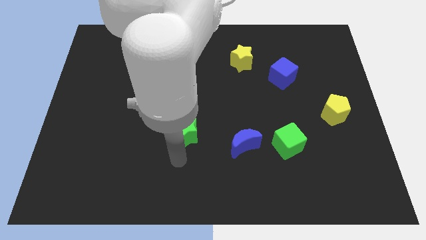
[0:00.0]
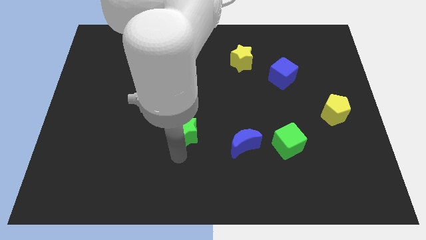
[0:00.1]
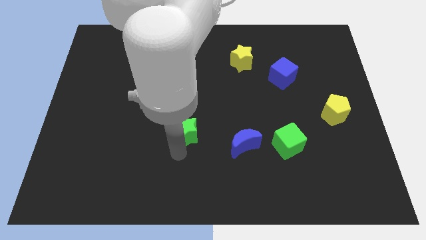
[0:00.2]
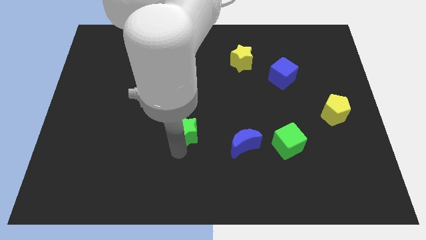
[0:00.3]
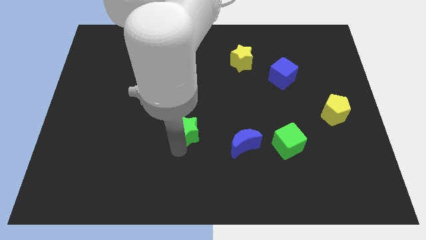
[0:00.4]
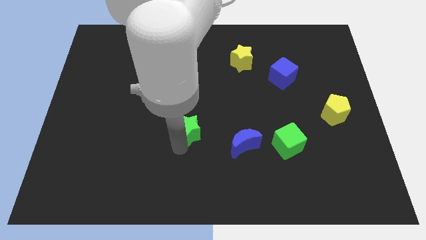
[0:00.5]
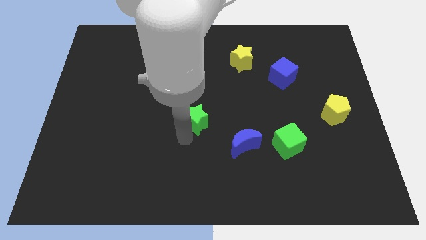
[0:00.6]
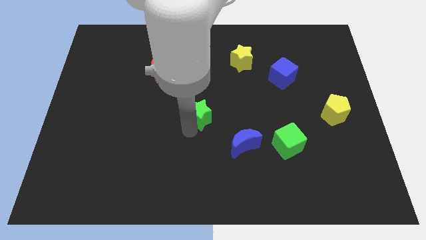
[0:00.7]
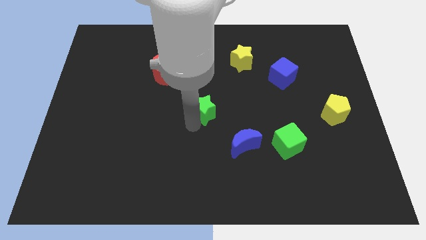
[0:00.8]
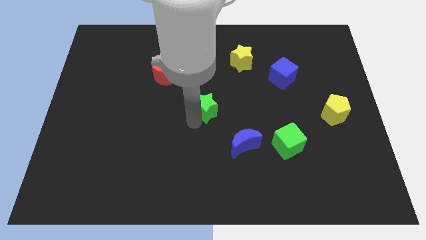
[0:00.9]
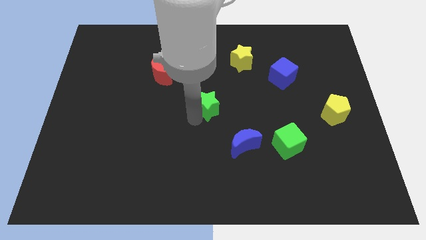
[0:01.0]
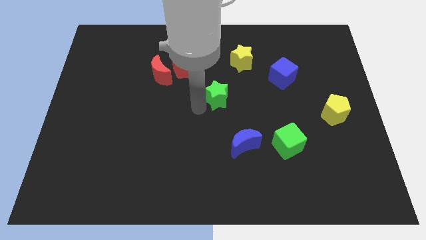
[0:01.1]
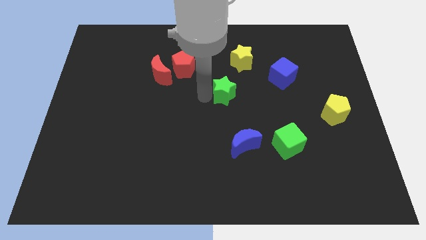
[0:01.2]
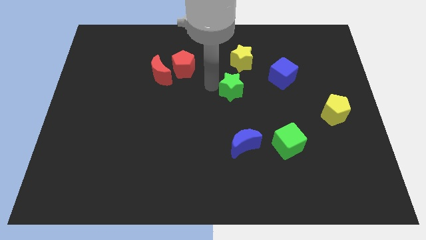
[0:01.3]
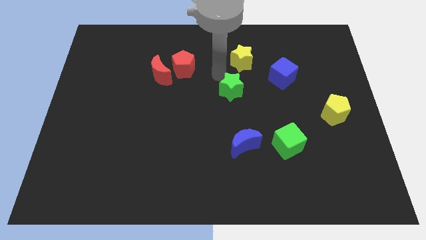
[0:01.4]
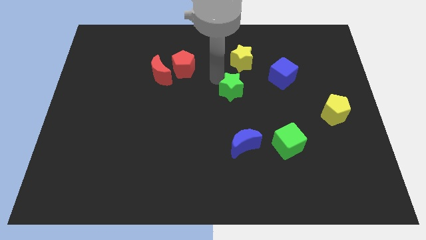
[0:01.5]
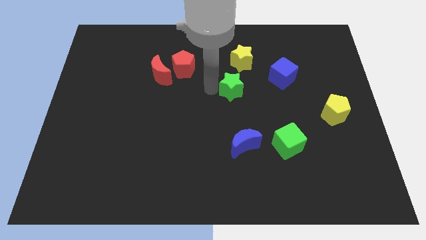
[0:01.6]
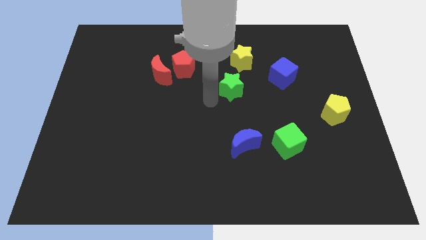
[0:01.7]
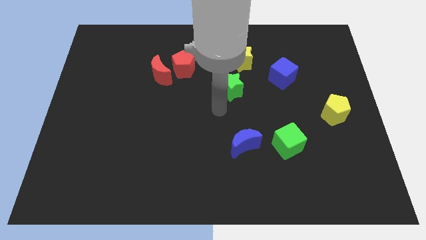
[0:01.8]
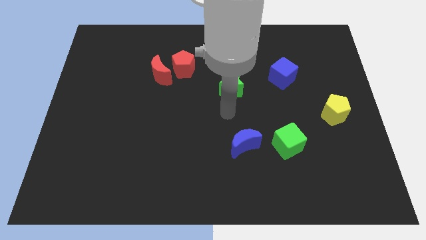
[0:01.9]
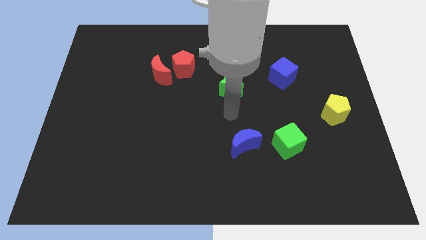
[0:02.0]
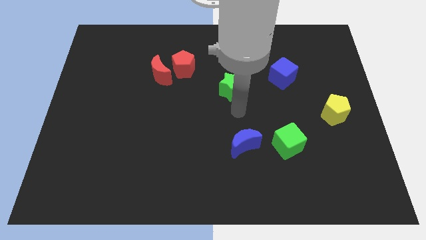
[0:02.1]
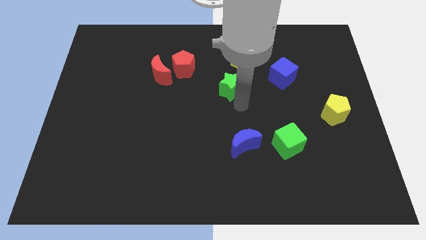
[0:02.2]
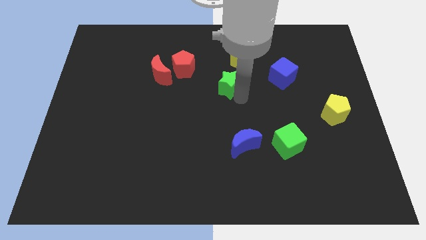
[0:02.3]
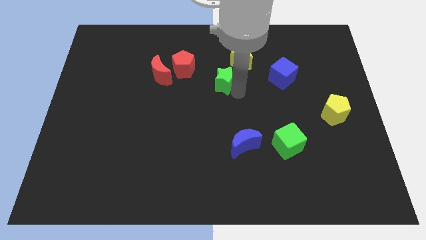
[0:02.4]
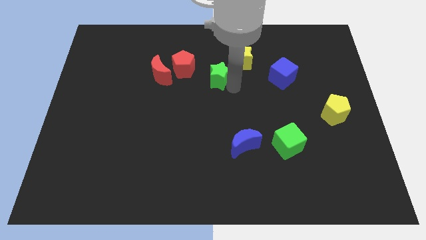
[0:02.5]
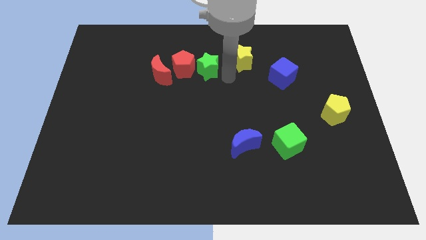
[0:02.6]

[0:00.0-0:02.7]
place the green star to the bottom right side of red pentagon

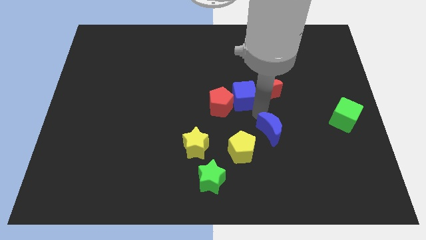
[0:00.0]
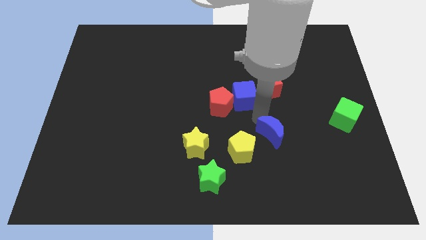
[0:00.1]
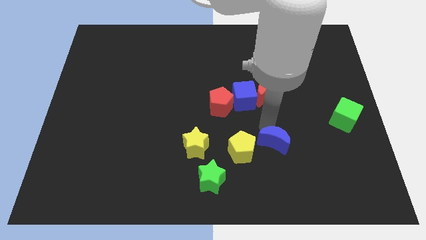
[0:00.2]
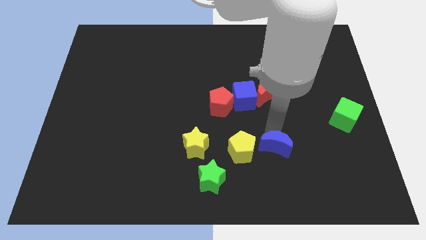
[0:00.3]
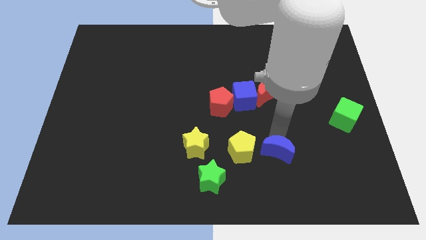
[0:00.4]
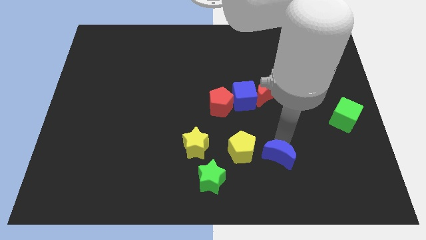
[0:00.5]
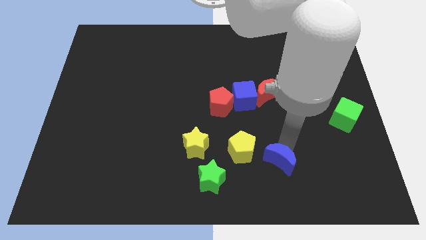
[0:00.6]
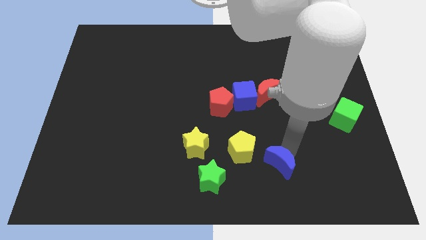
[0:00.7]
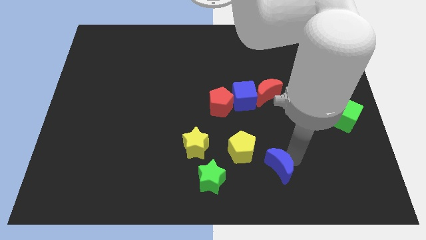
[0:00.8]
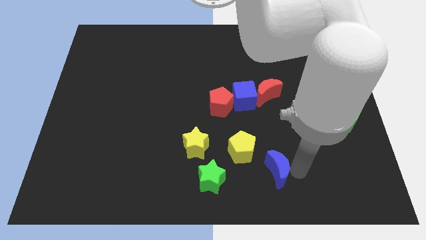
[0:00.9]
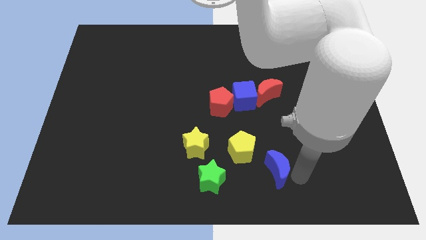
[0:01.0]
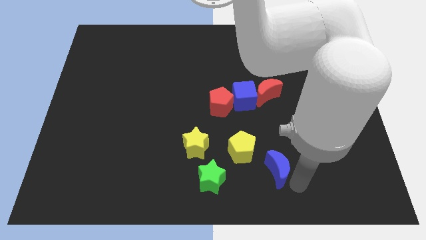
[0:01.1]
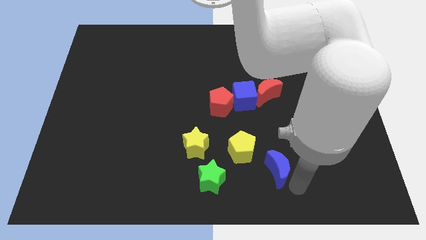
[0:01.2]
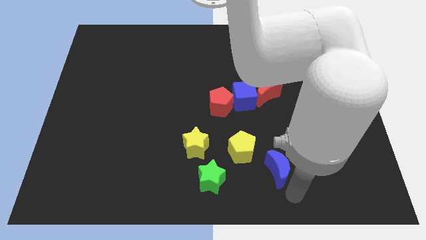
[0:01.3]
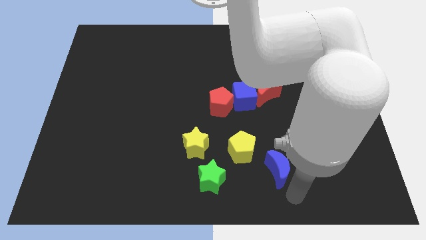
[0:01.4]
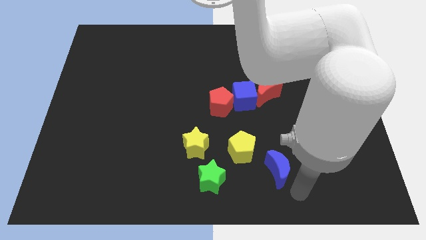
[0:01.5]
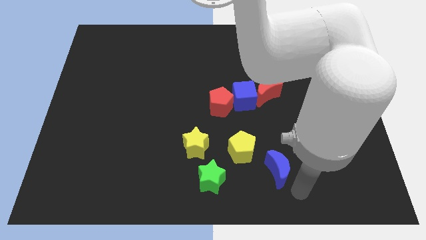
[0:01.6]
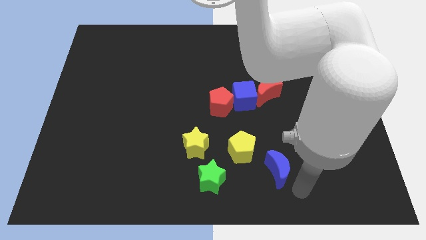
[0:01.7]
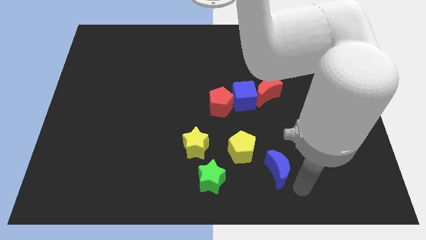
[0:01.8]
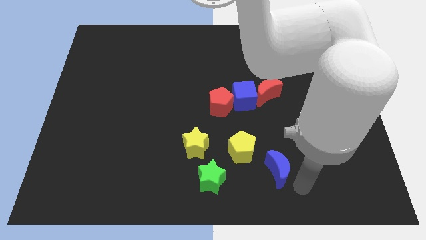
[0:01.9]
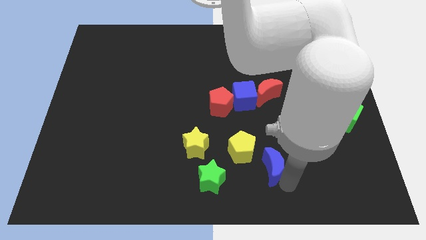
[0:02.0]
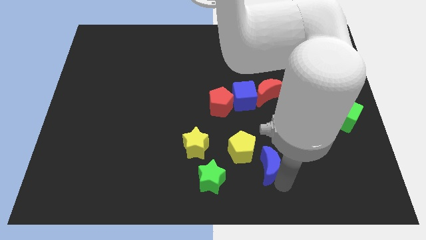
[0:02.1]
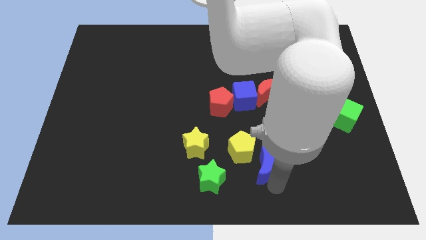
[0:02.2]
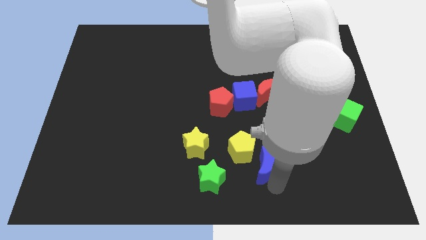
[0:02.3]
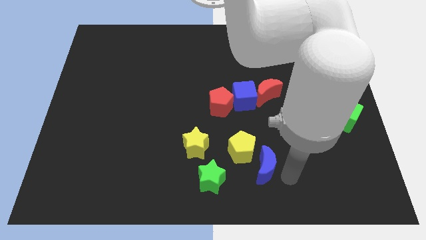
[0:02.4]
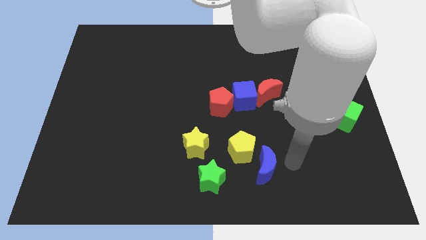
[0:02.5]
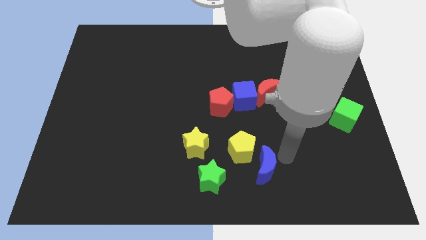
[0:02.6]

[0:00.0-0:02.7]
place the blue moon diagonally to green cube

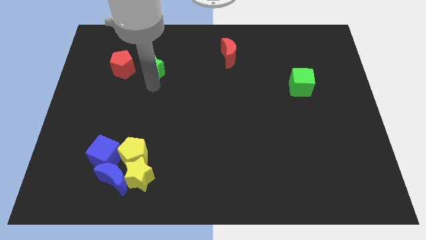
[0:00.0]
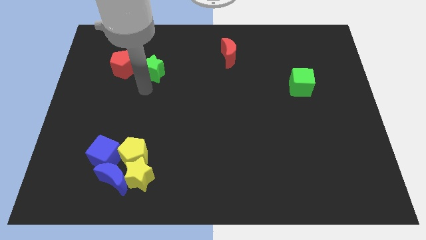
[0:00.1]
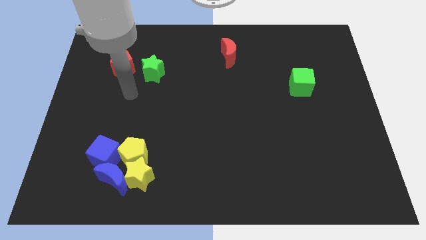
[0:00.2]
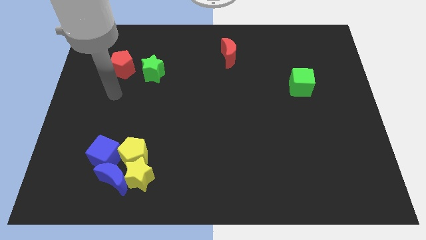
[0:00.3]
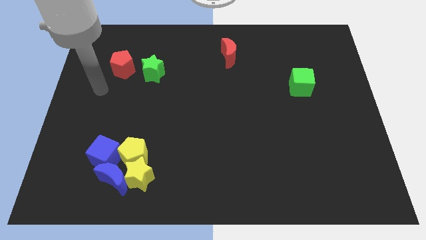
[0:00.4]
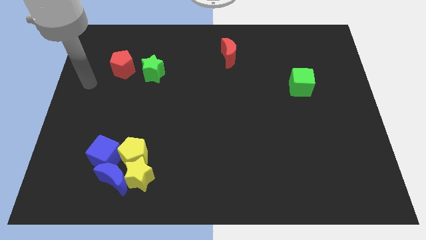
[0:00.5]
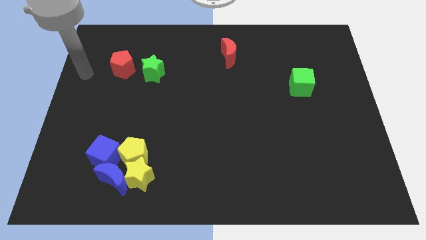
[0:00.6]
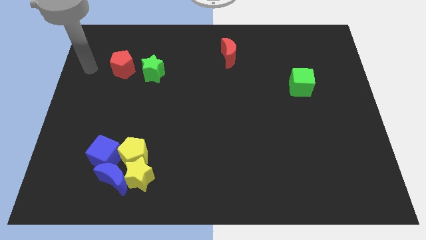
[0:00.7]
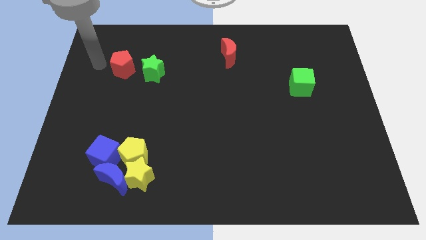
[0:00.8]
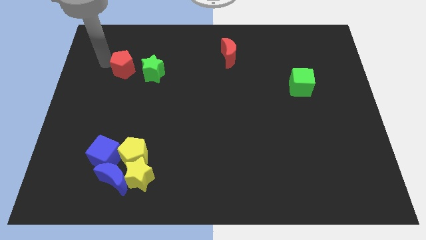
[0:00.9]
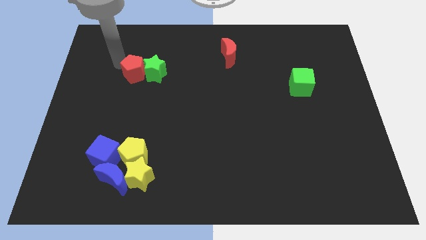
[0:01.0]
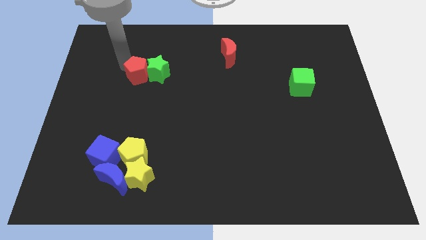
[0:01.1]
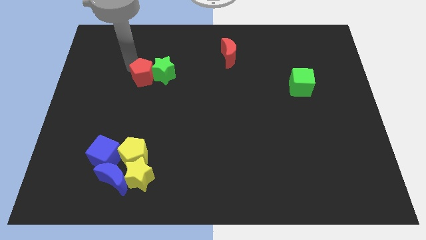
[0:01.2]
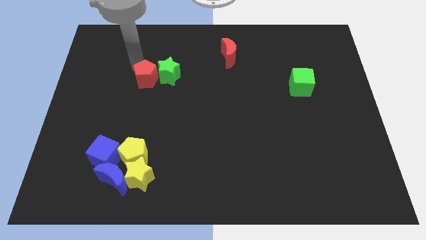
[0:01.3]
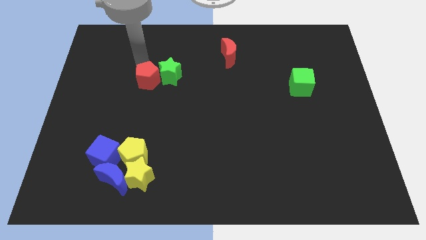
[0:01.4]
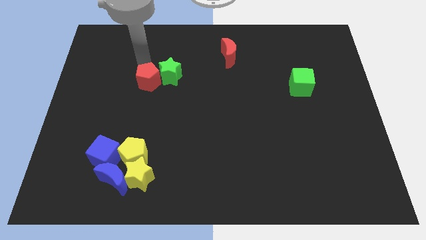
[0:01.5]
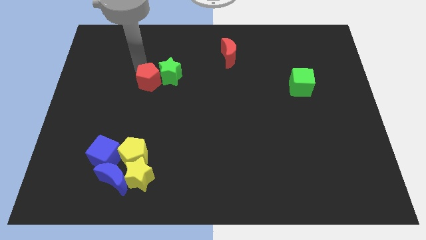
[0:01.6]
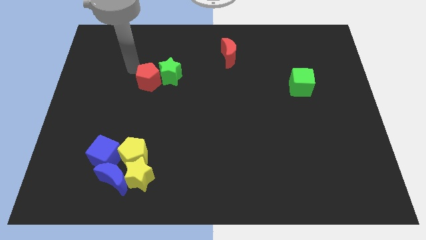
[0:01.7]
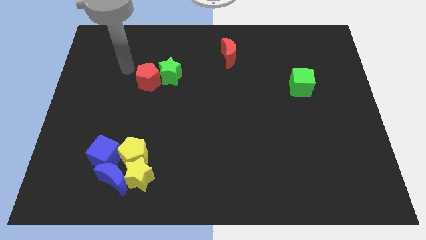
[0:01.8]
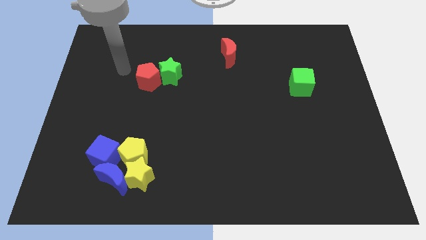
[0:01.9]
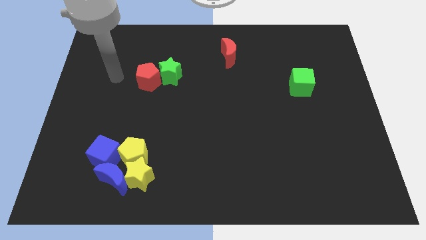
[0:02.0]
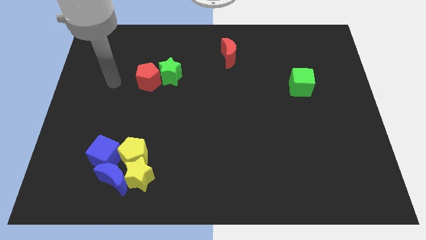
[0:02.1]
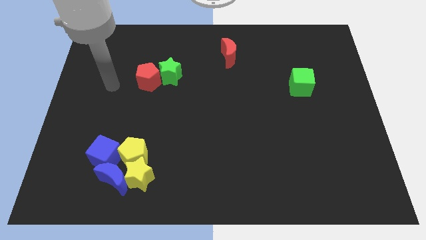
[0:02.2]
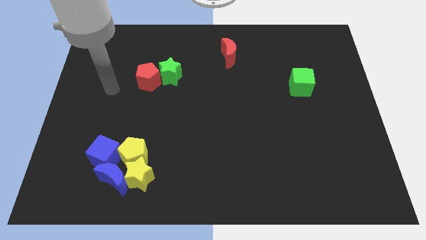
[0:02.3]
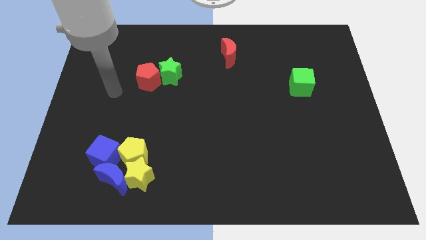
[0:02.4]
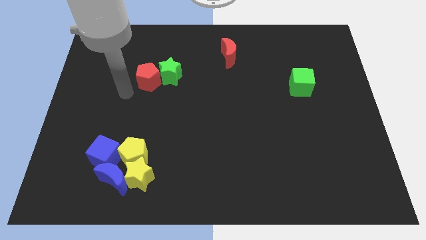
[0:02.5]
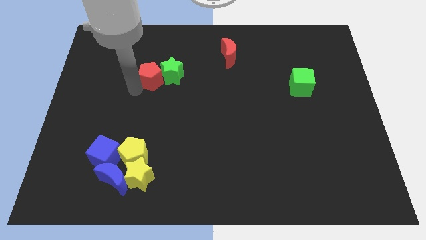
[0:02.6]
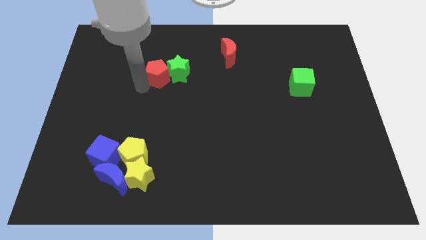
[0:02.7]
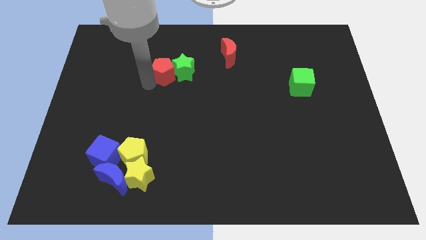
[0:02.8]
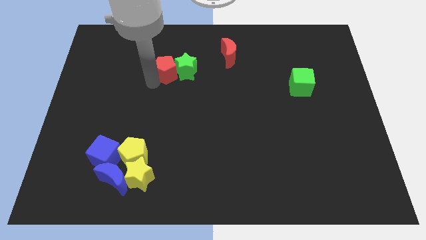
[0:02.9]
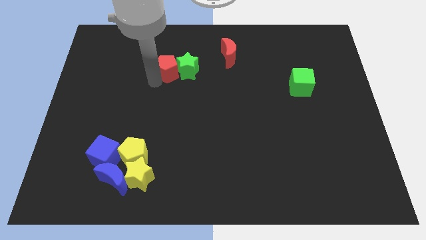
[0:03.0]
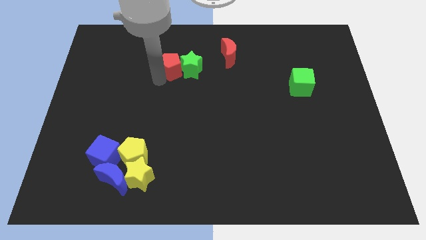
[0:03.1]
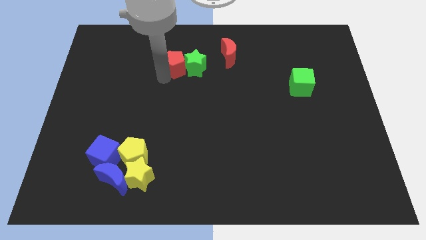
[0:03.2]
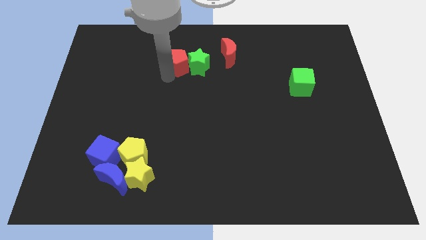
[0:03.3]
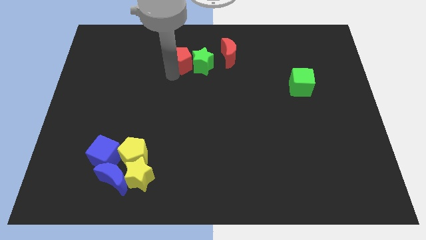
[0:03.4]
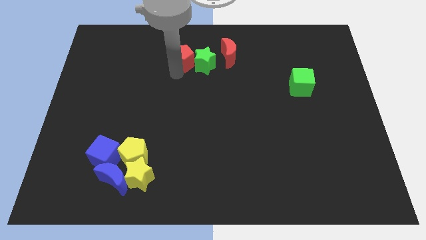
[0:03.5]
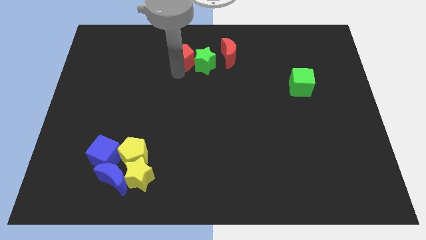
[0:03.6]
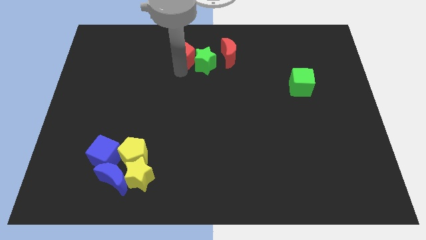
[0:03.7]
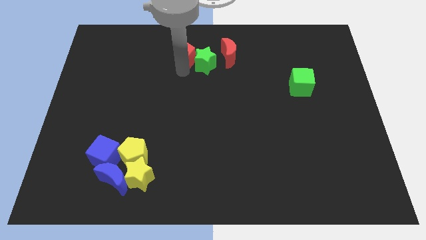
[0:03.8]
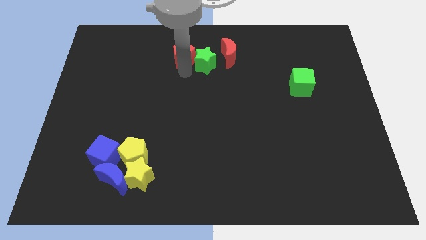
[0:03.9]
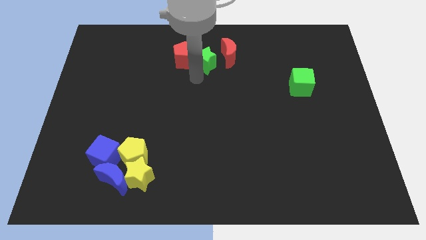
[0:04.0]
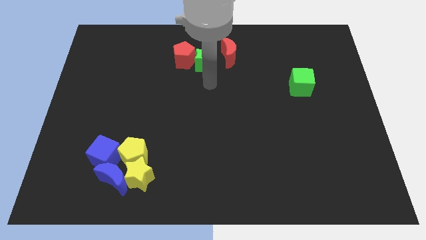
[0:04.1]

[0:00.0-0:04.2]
move the red pentagon and the green star together into the red crescent
